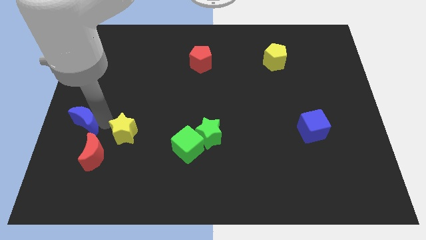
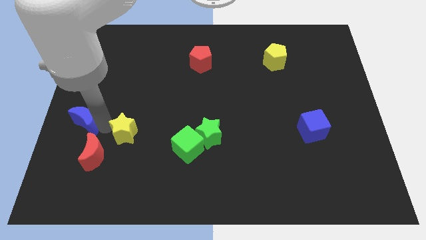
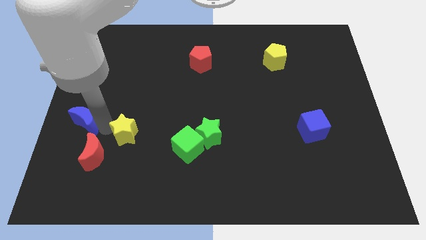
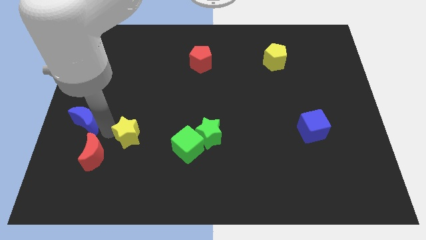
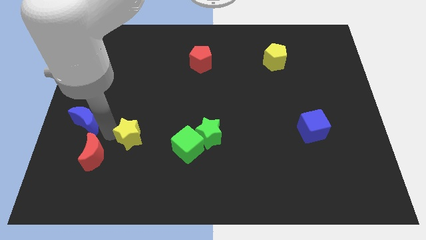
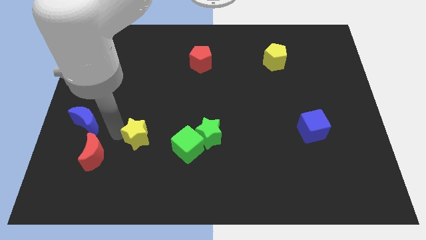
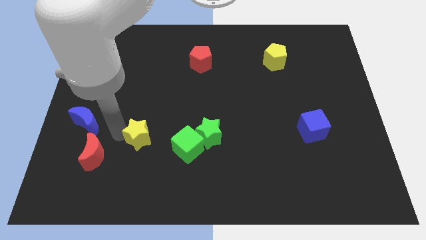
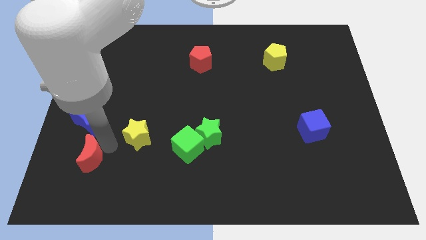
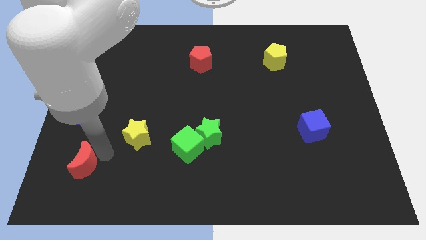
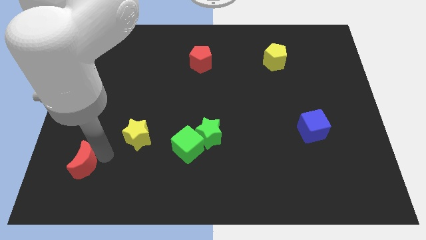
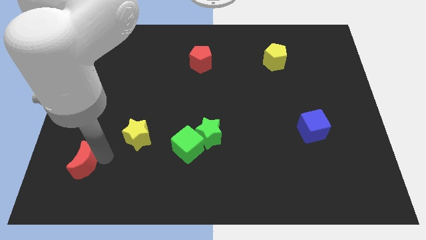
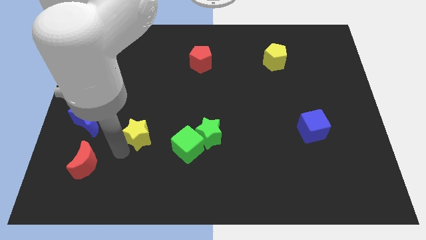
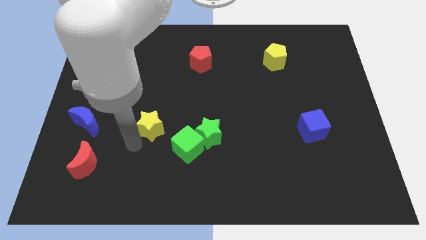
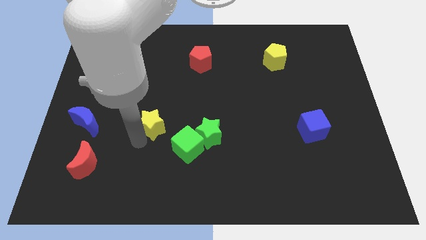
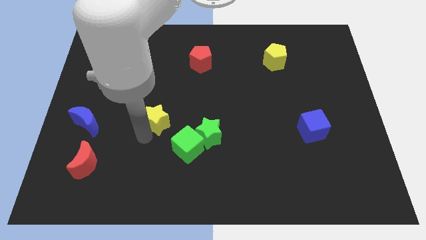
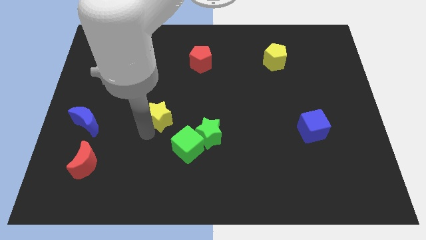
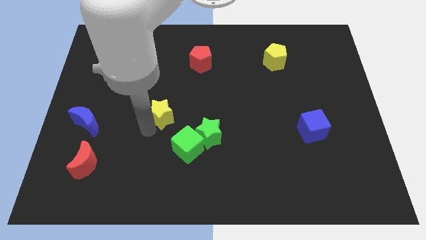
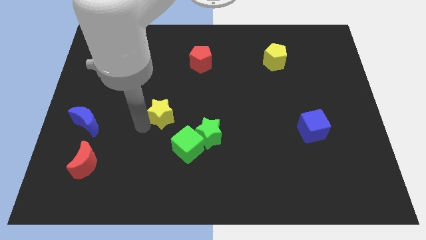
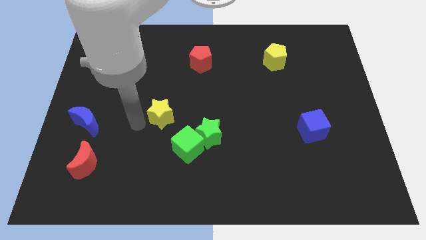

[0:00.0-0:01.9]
push the yellow star diagonal above green cube

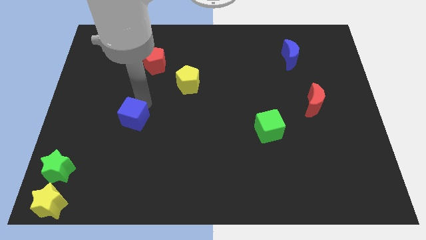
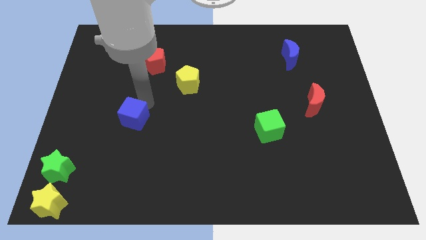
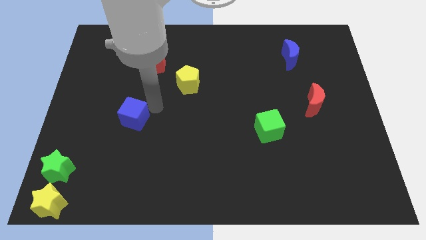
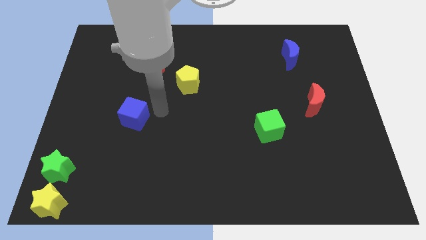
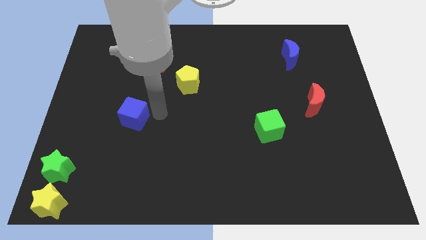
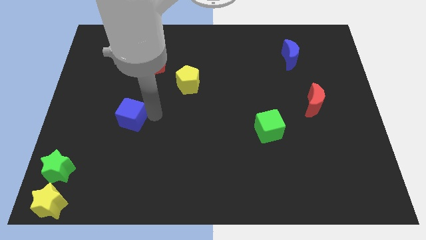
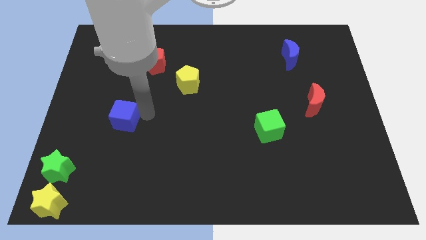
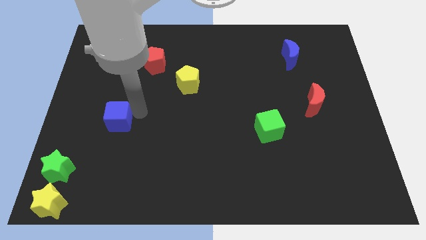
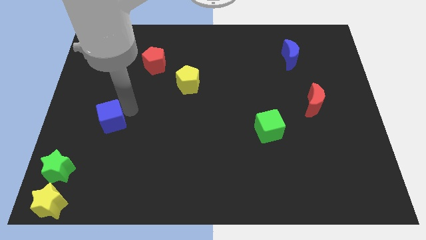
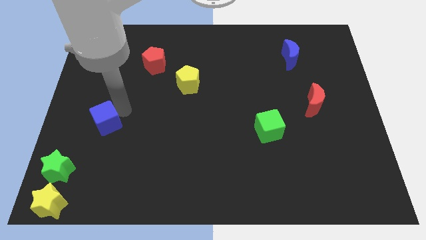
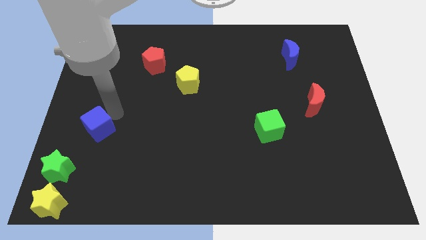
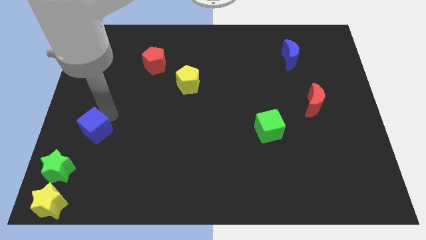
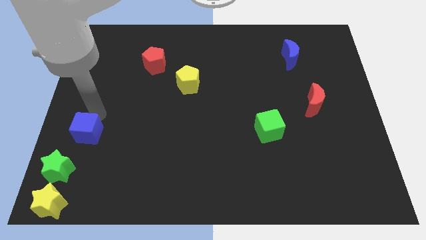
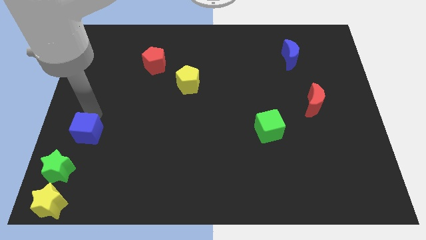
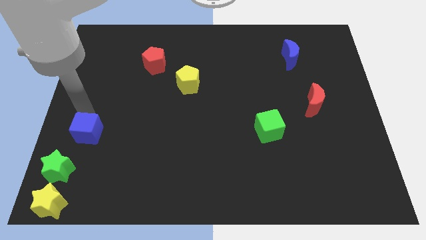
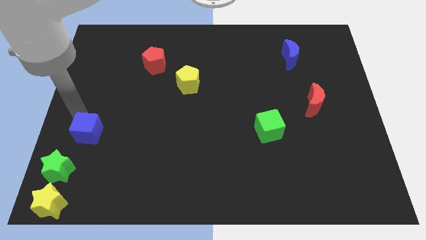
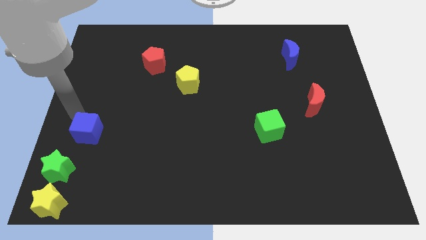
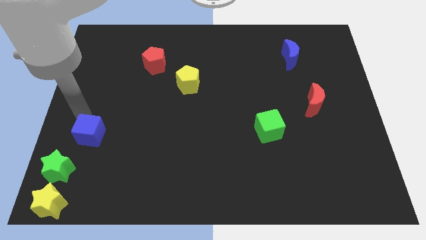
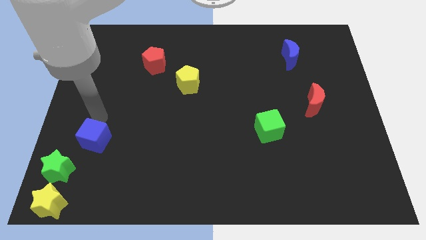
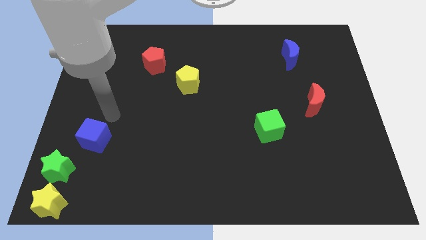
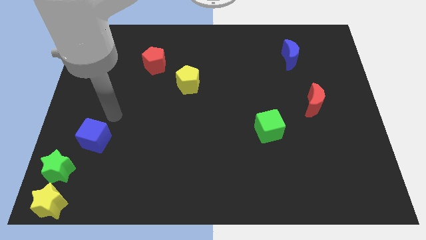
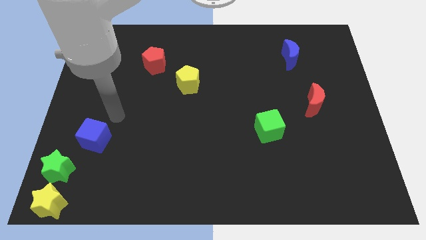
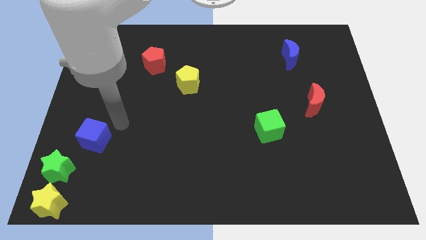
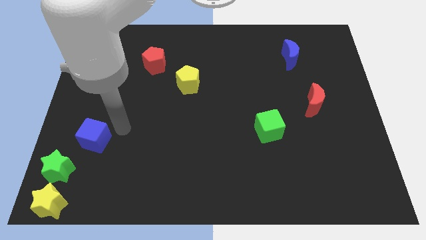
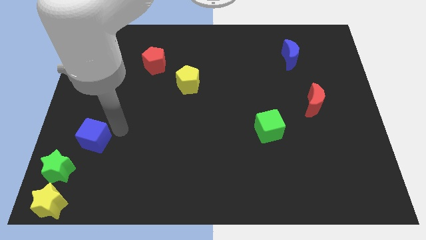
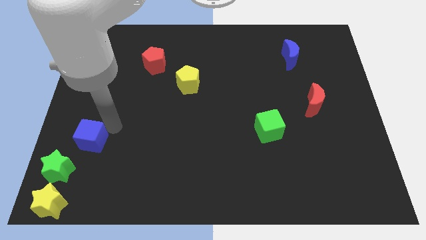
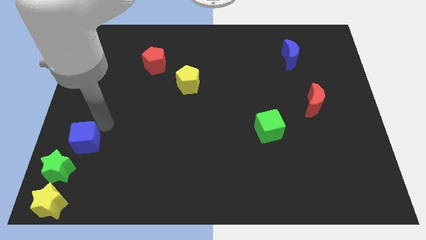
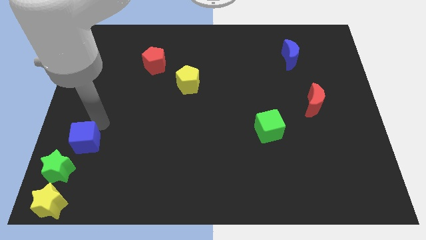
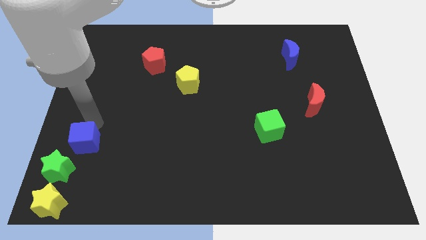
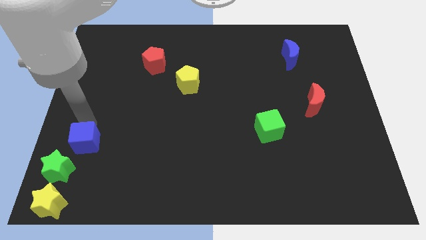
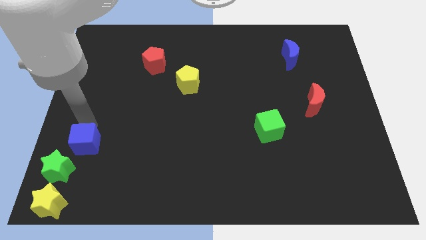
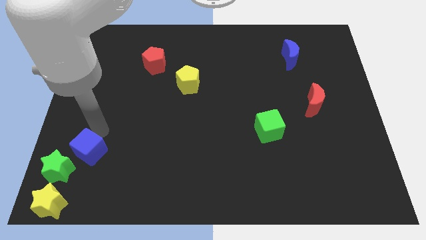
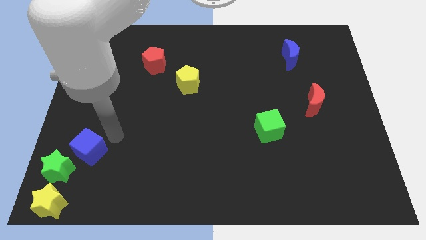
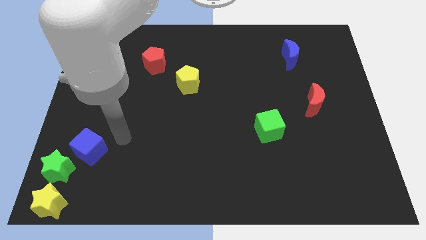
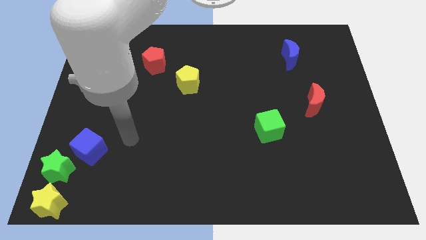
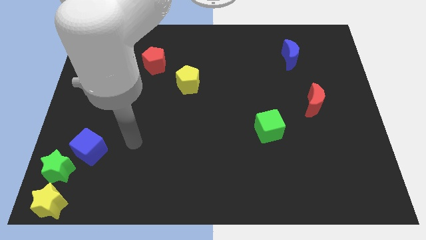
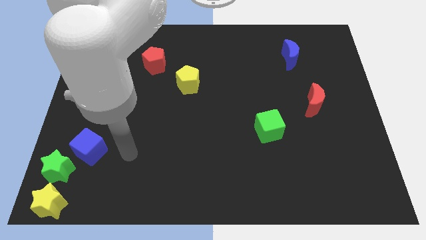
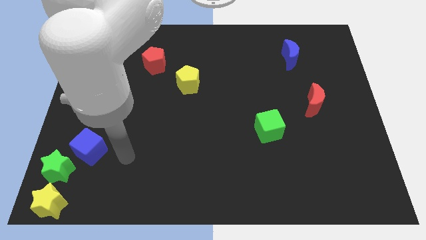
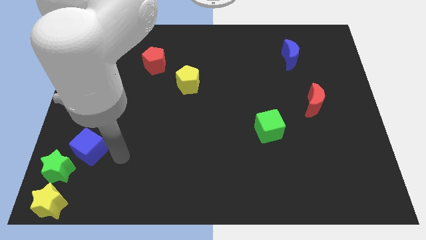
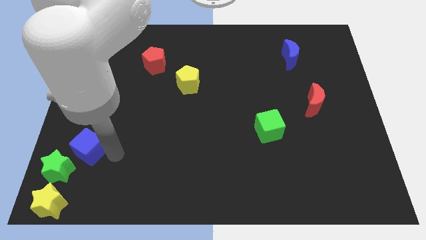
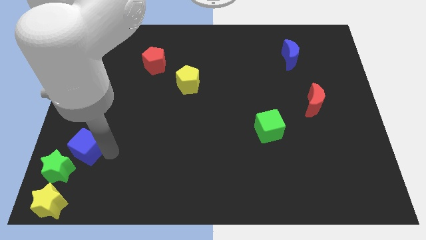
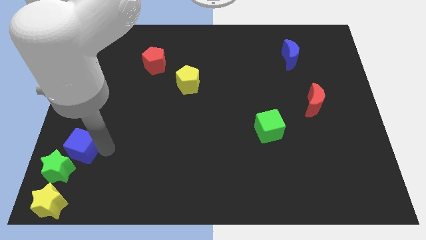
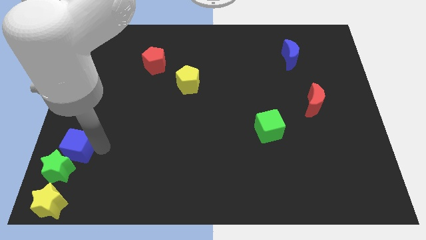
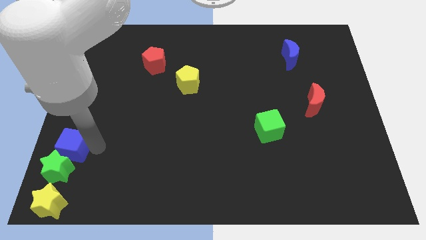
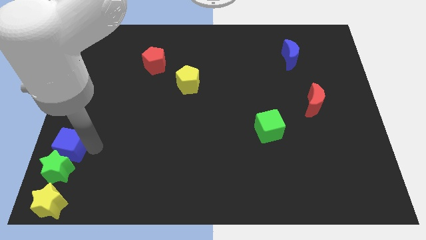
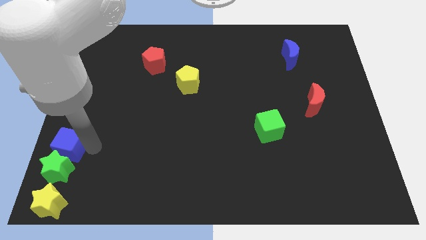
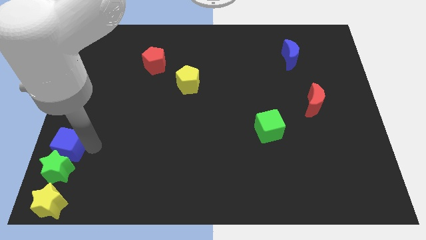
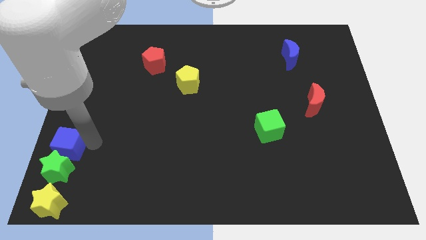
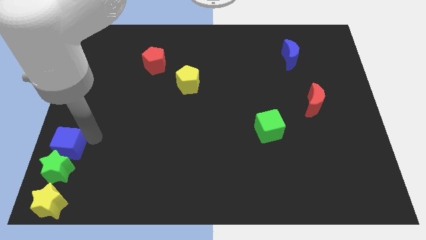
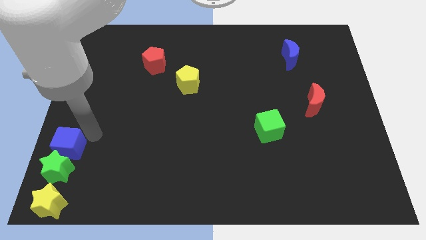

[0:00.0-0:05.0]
push the blue cube to the top of the green star

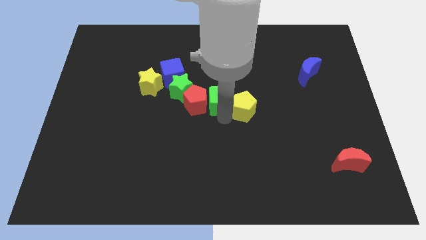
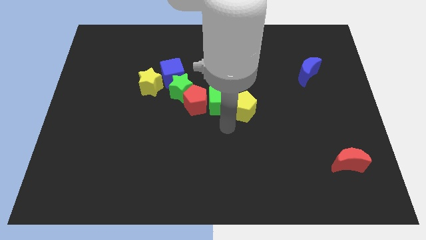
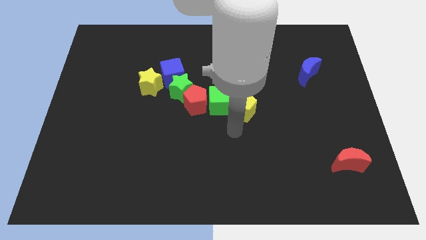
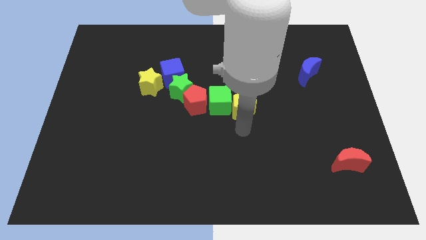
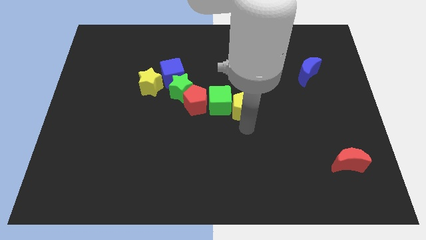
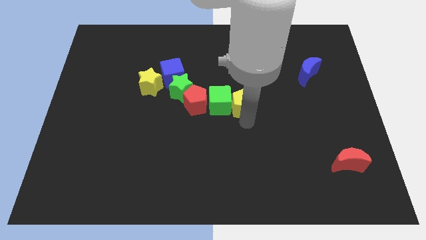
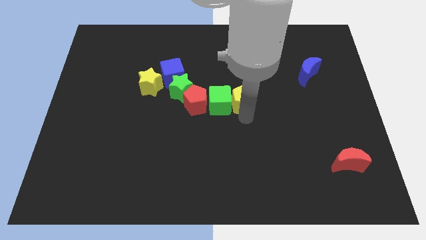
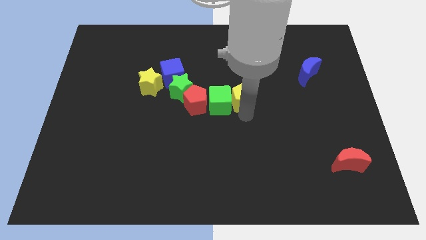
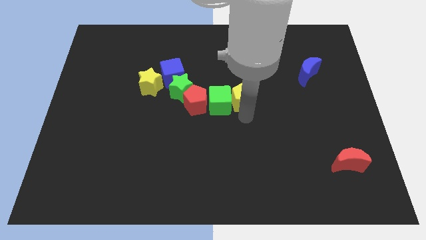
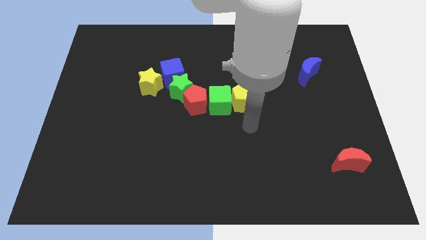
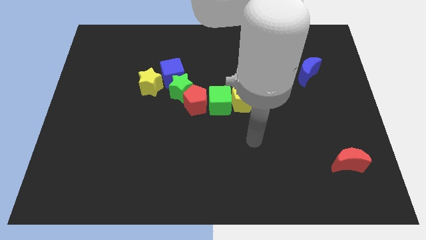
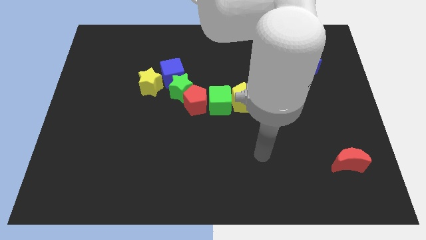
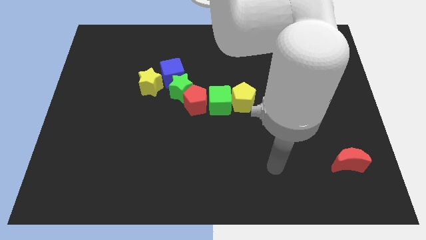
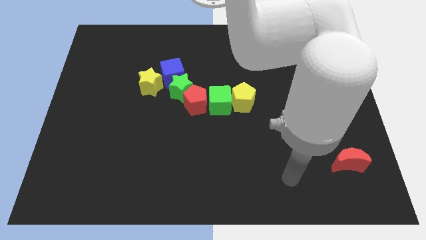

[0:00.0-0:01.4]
move the yellow pentagon slightly up

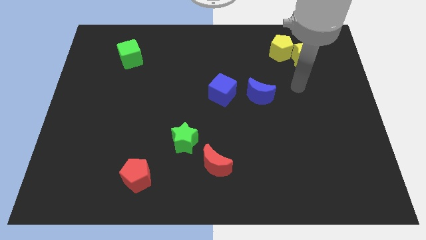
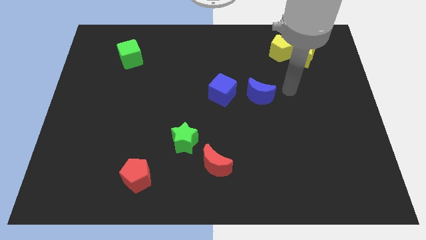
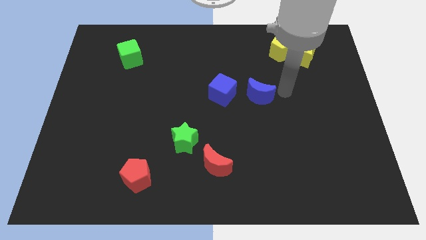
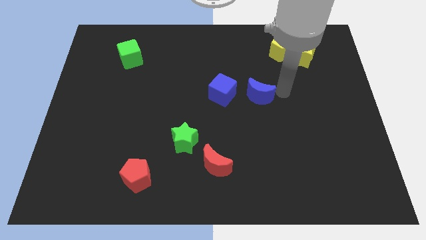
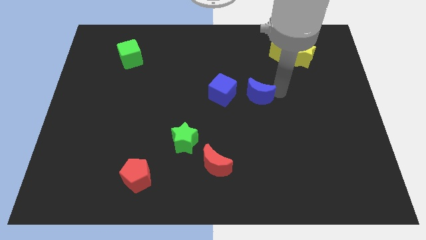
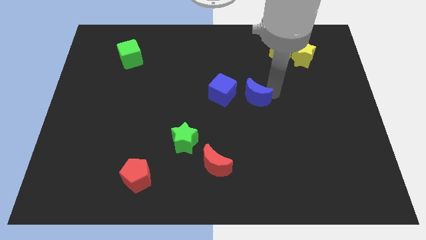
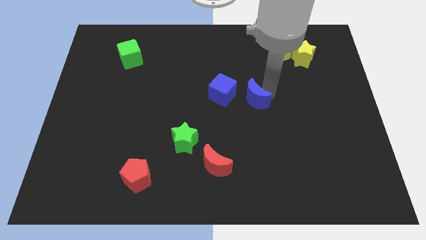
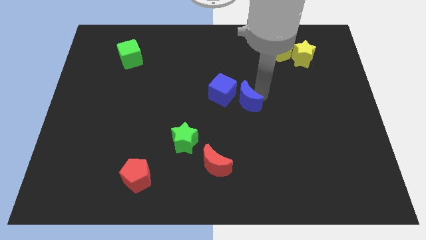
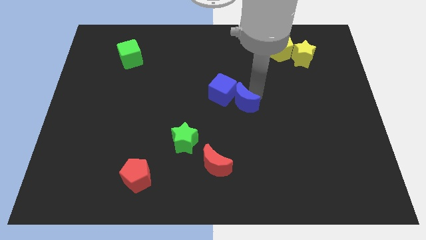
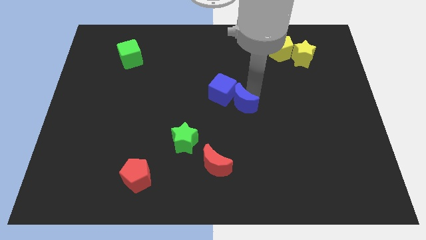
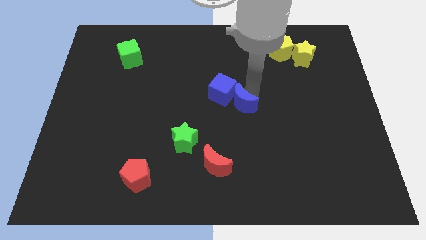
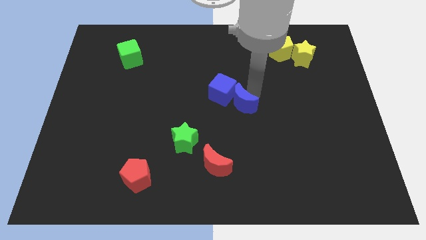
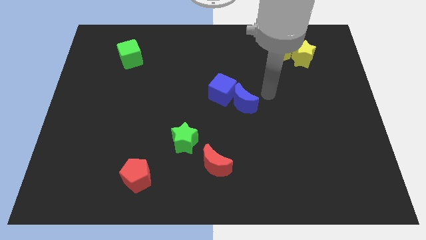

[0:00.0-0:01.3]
move the red moon beside the blue cube
